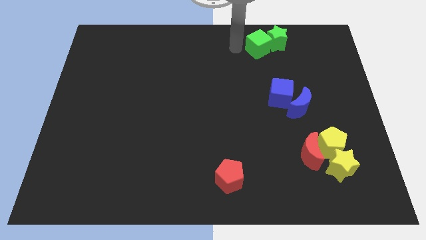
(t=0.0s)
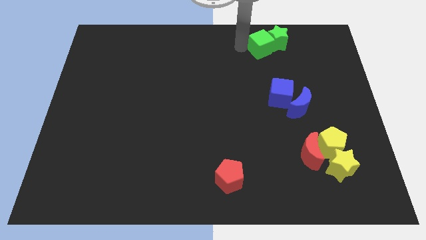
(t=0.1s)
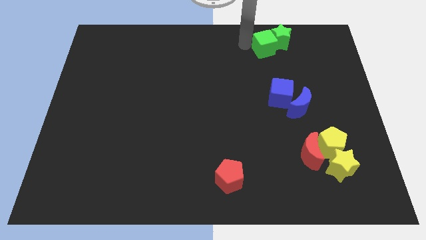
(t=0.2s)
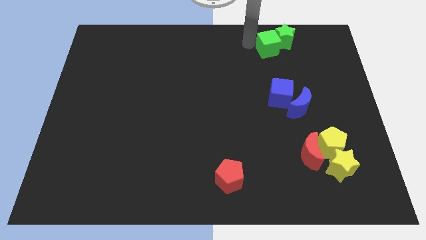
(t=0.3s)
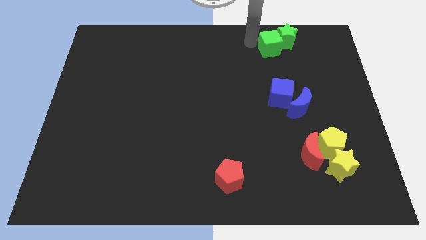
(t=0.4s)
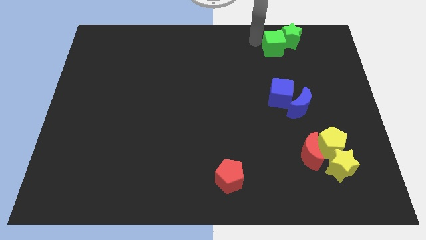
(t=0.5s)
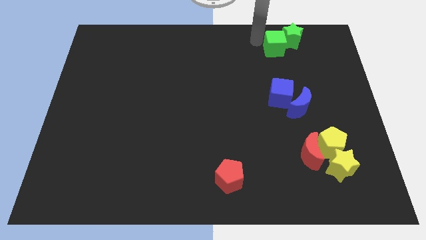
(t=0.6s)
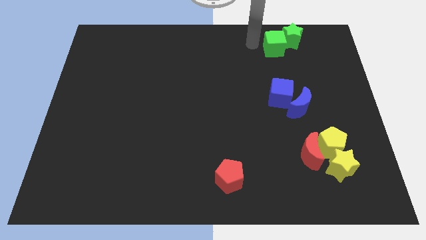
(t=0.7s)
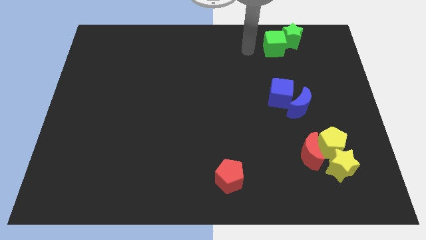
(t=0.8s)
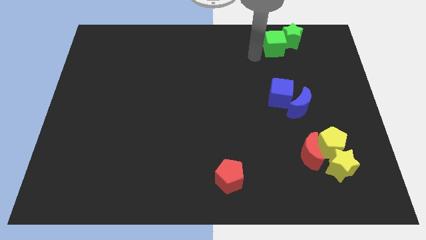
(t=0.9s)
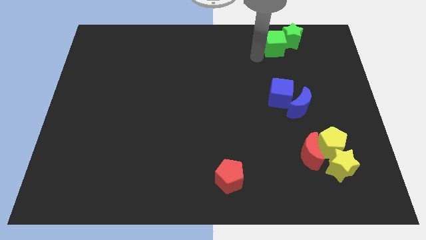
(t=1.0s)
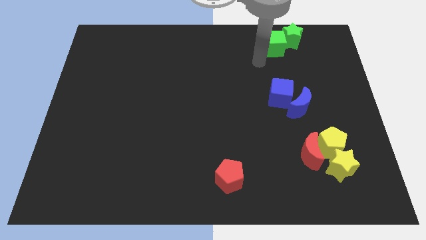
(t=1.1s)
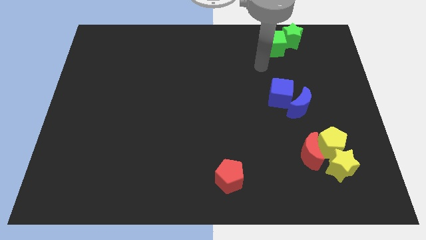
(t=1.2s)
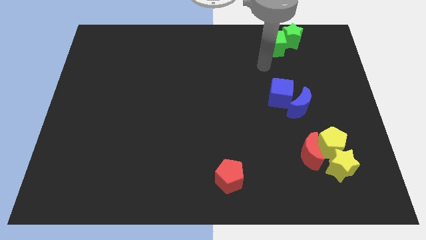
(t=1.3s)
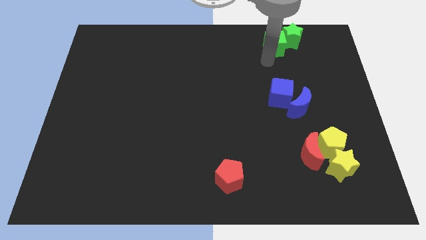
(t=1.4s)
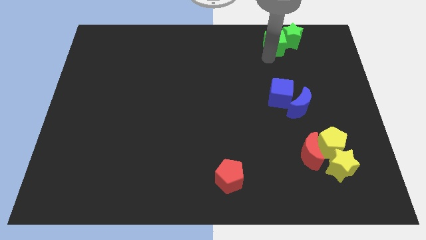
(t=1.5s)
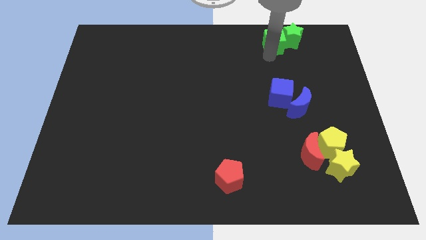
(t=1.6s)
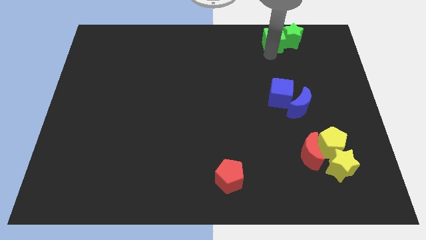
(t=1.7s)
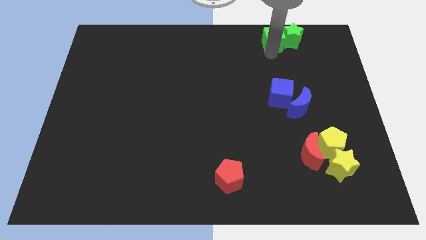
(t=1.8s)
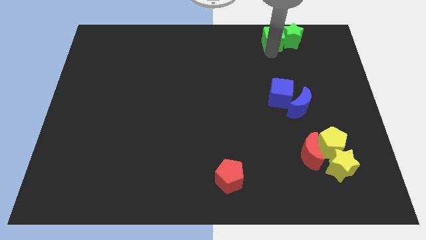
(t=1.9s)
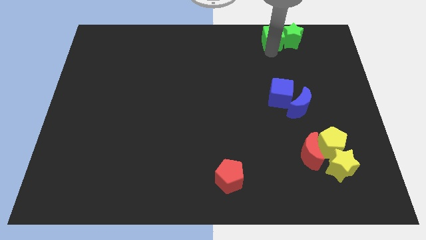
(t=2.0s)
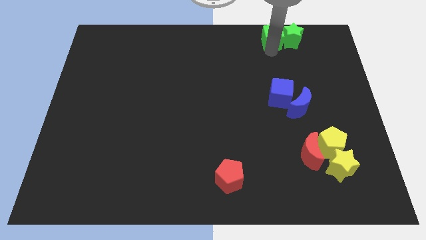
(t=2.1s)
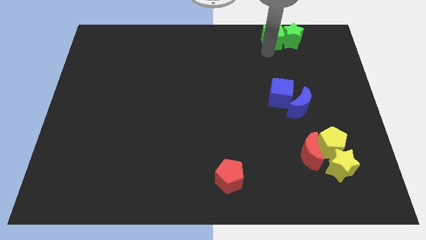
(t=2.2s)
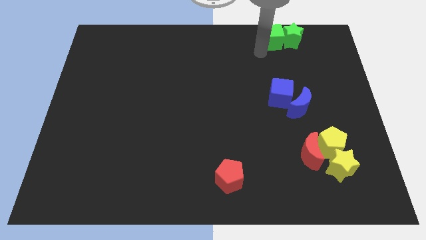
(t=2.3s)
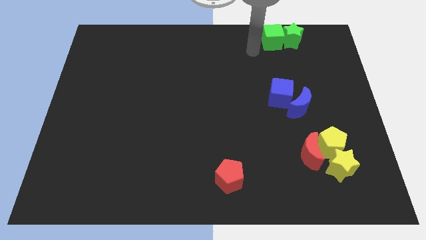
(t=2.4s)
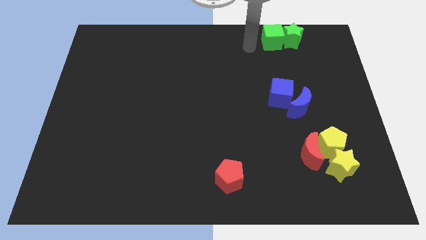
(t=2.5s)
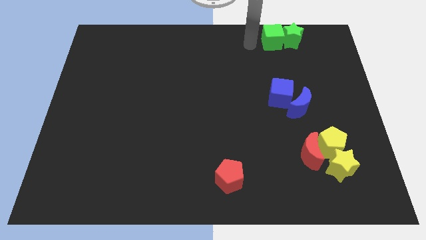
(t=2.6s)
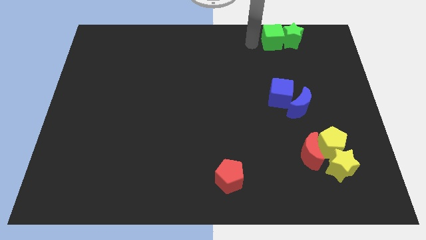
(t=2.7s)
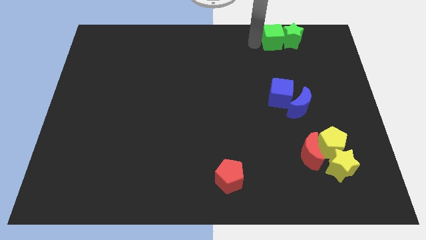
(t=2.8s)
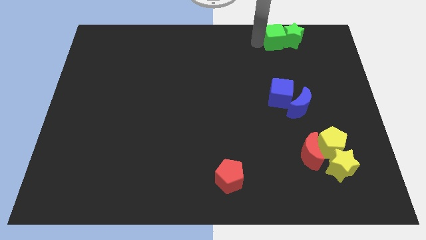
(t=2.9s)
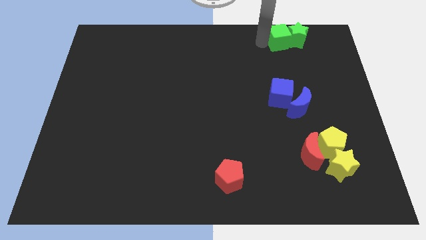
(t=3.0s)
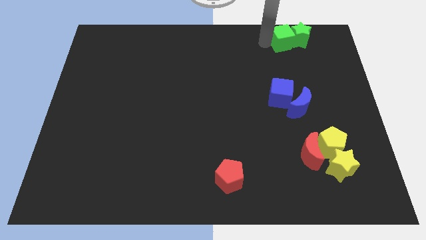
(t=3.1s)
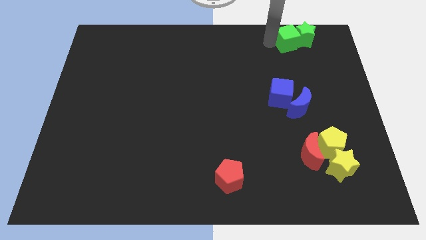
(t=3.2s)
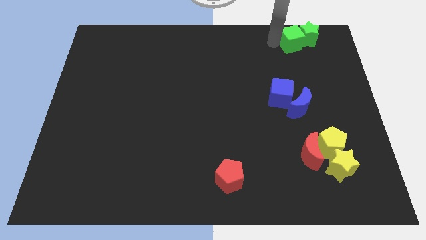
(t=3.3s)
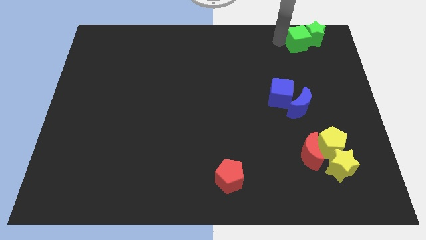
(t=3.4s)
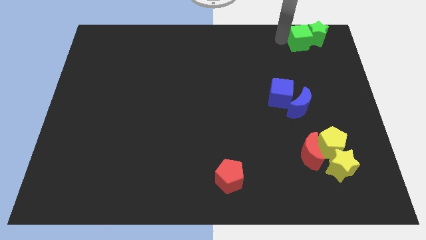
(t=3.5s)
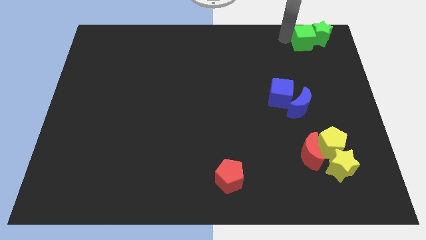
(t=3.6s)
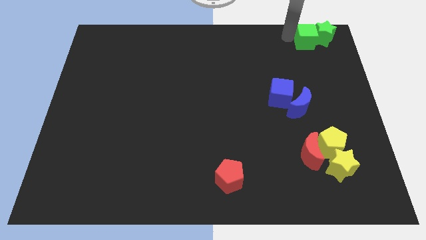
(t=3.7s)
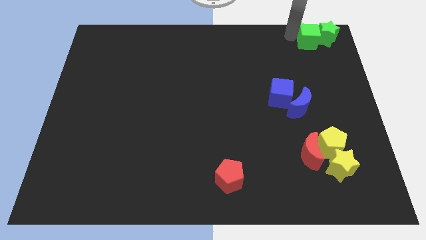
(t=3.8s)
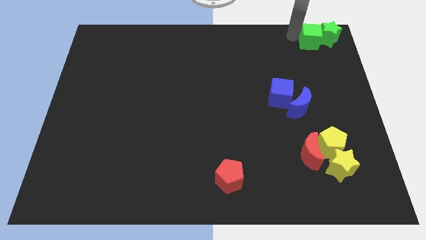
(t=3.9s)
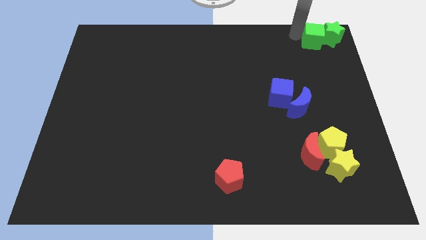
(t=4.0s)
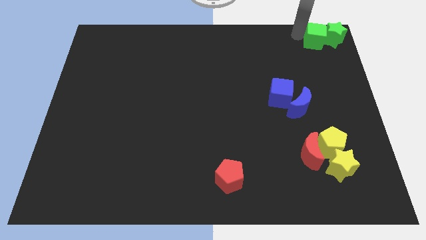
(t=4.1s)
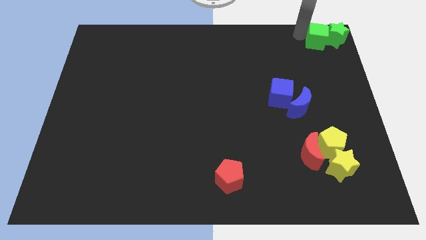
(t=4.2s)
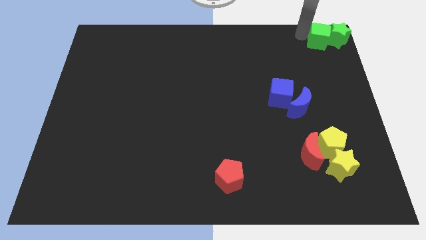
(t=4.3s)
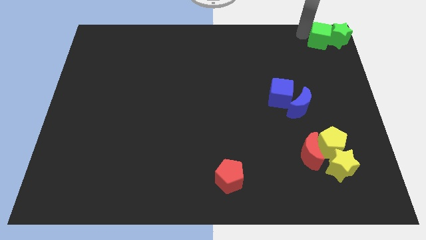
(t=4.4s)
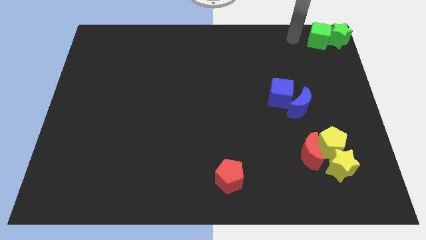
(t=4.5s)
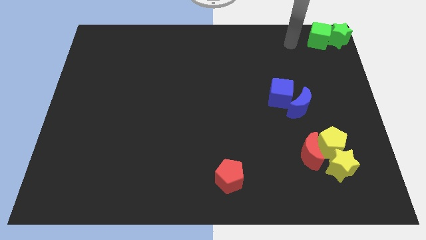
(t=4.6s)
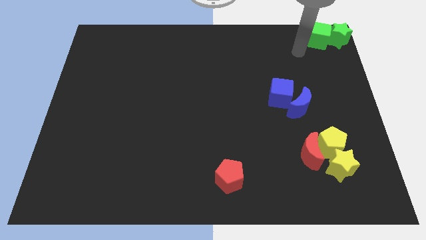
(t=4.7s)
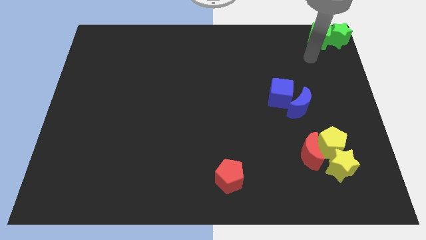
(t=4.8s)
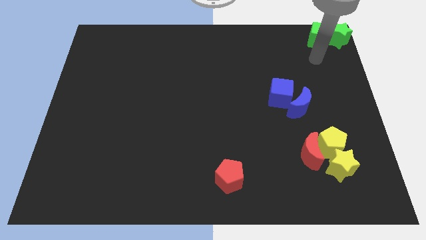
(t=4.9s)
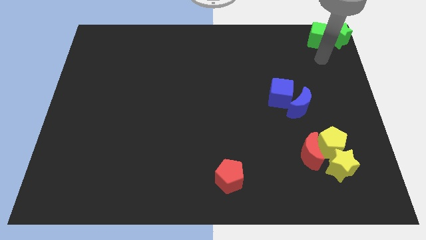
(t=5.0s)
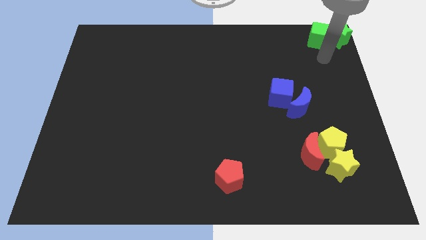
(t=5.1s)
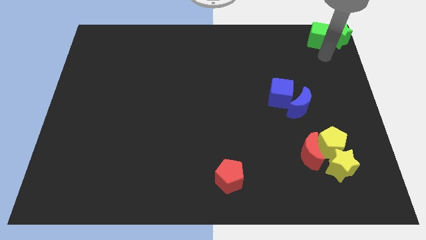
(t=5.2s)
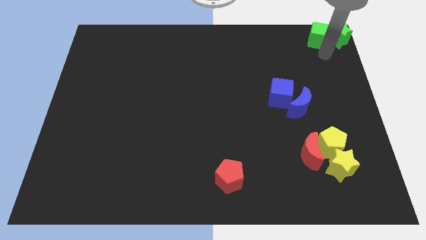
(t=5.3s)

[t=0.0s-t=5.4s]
move the green blocks to the top right corner of the board

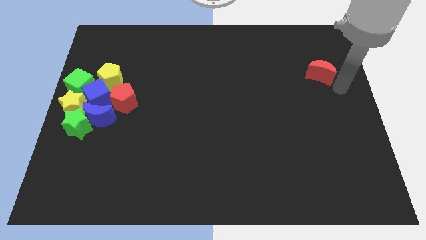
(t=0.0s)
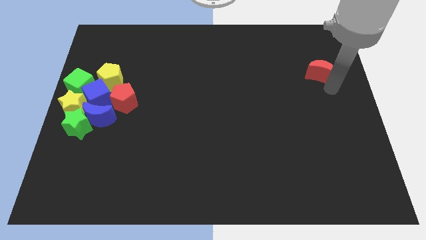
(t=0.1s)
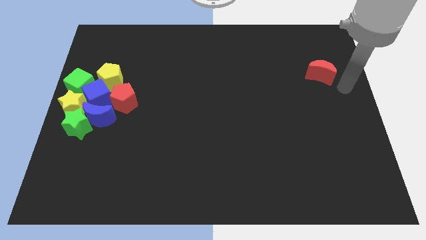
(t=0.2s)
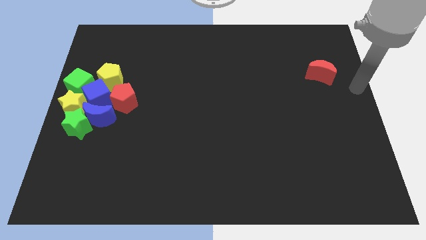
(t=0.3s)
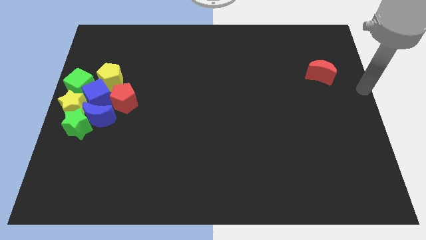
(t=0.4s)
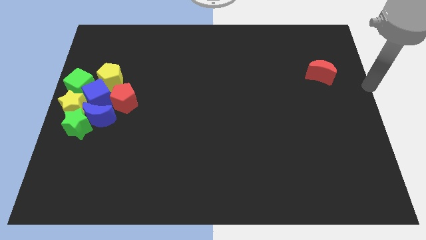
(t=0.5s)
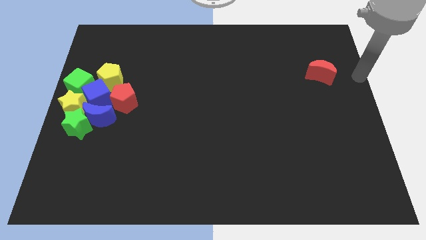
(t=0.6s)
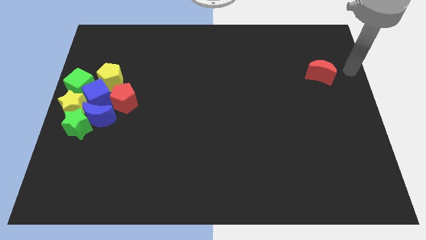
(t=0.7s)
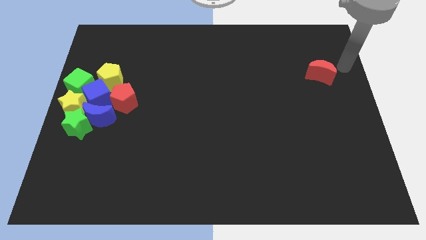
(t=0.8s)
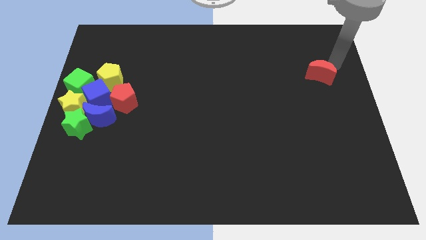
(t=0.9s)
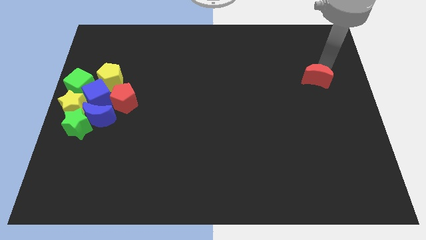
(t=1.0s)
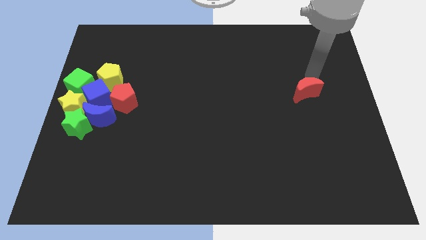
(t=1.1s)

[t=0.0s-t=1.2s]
slightly move the red moon down

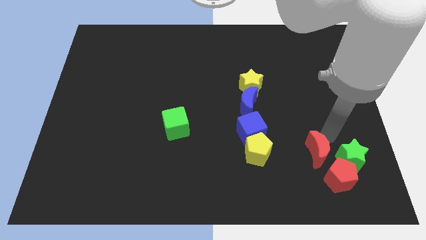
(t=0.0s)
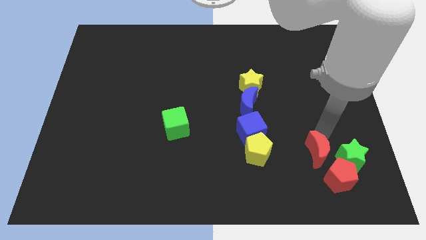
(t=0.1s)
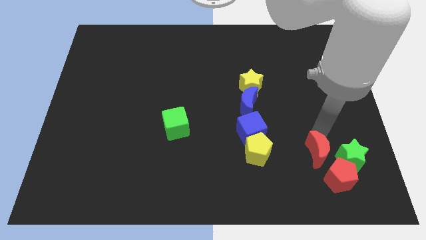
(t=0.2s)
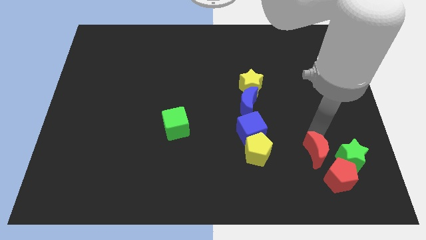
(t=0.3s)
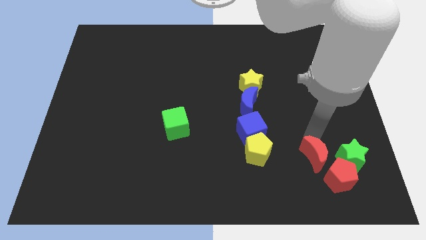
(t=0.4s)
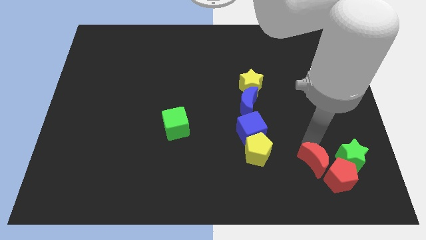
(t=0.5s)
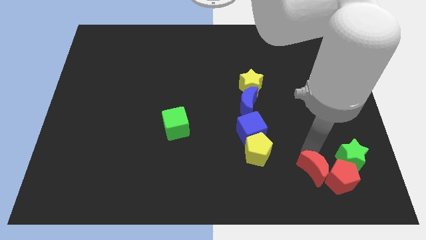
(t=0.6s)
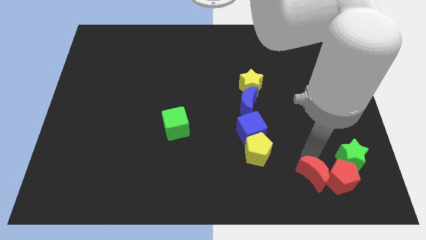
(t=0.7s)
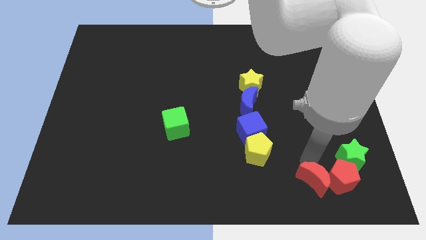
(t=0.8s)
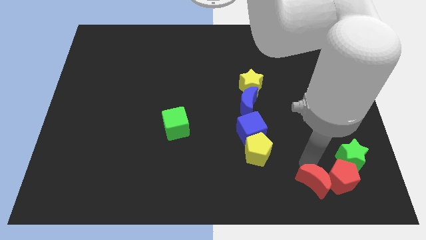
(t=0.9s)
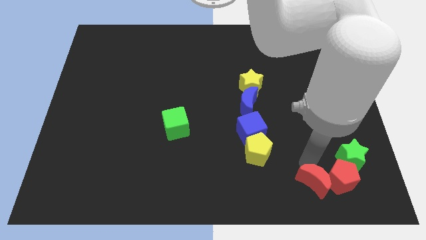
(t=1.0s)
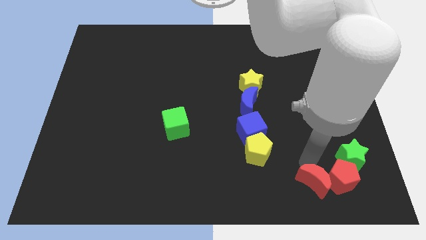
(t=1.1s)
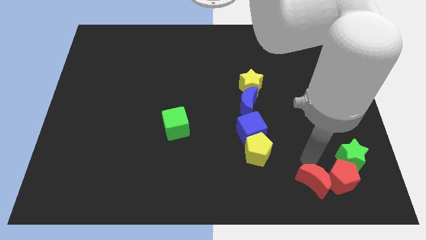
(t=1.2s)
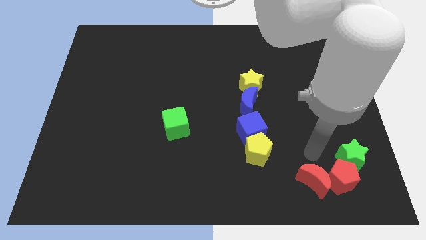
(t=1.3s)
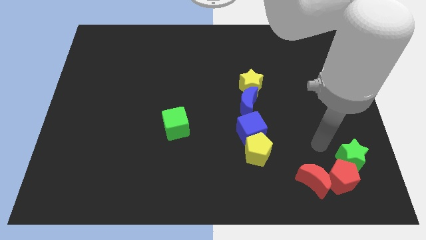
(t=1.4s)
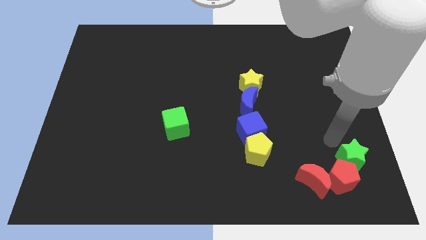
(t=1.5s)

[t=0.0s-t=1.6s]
put the red crescent to the left side of the red pentagon

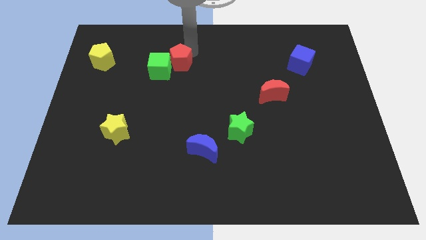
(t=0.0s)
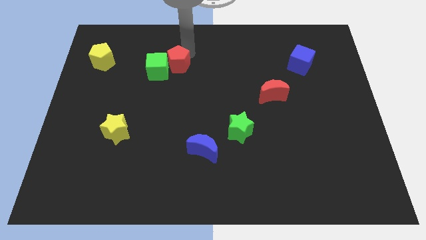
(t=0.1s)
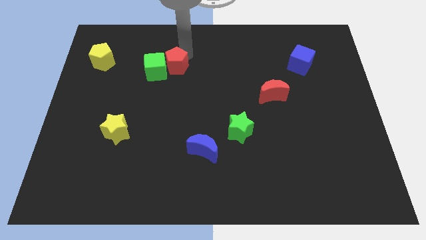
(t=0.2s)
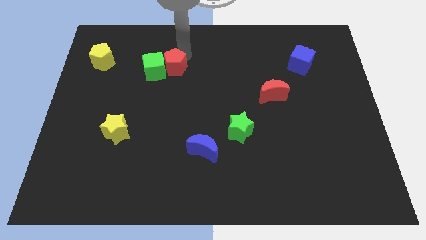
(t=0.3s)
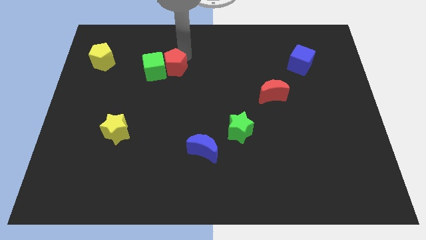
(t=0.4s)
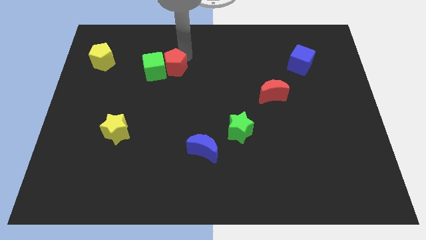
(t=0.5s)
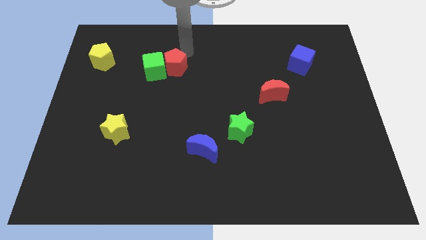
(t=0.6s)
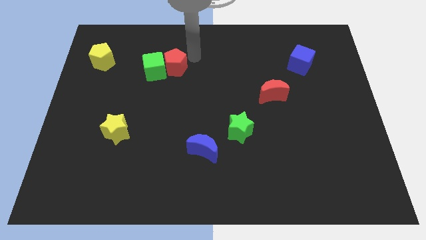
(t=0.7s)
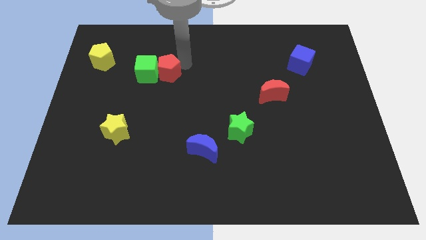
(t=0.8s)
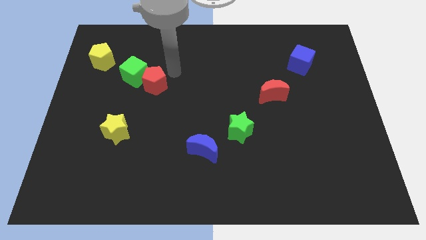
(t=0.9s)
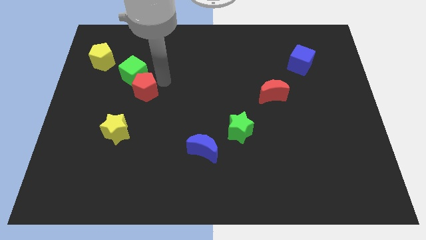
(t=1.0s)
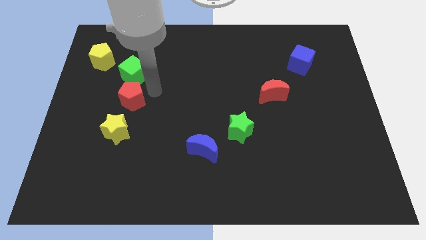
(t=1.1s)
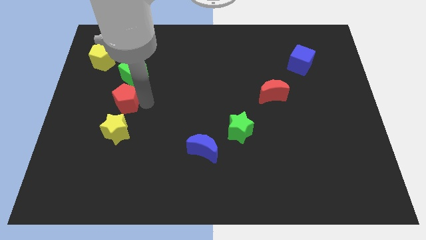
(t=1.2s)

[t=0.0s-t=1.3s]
move red pentagon in between two blocks
